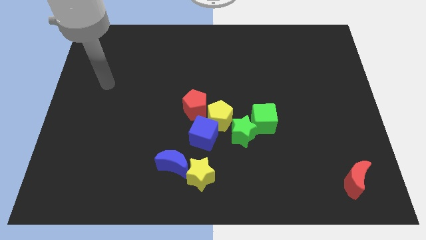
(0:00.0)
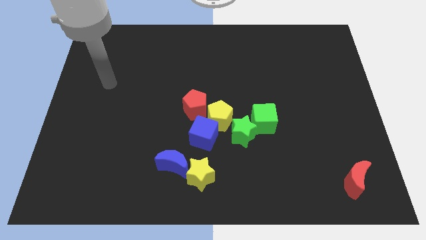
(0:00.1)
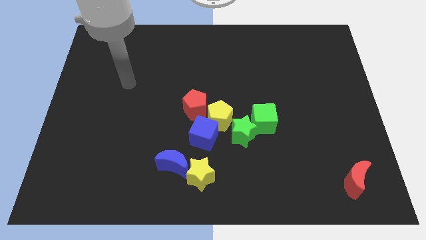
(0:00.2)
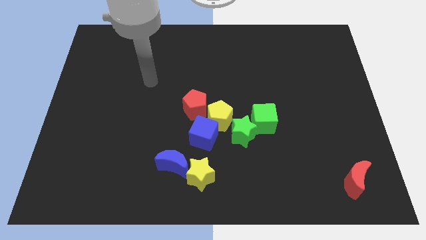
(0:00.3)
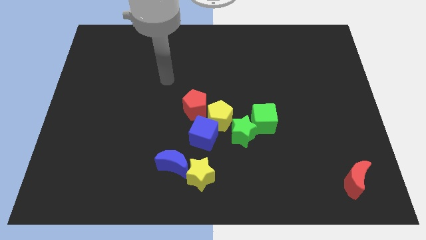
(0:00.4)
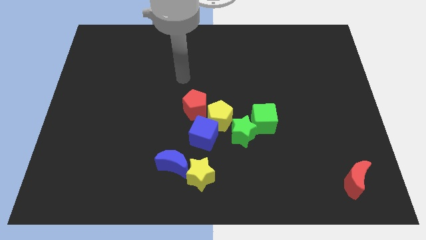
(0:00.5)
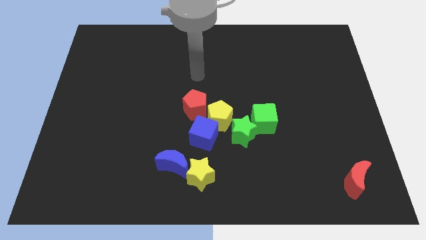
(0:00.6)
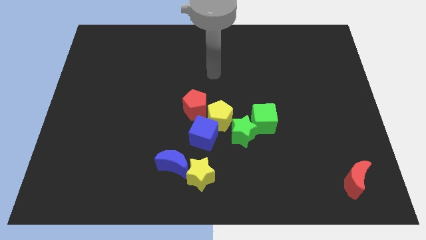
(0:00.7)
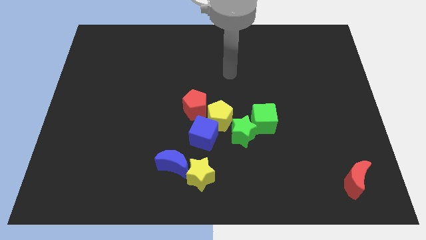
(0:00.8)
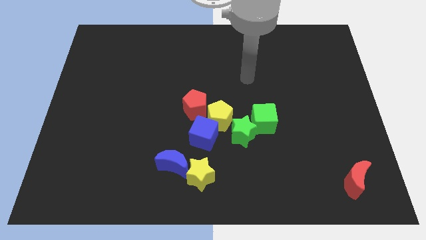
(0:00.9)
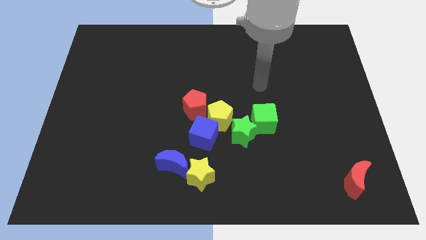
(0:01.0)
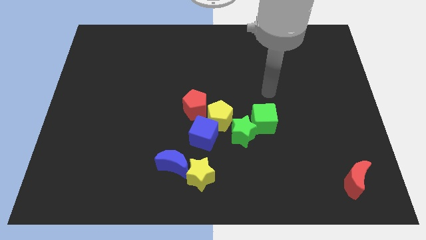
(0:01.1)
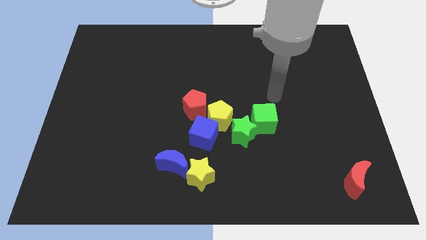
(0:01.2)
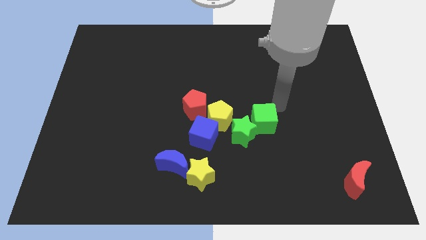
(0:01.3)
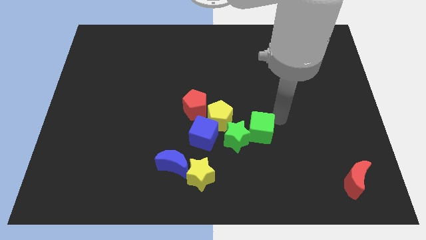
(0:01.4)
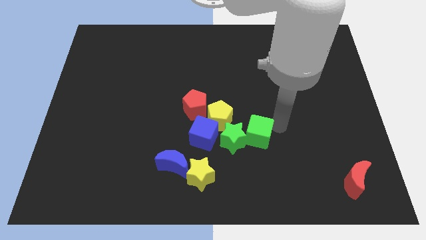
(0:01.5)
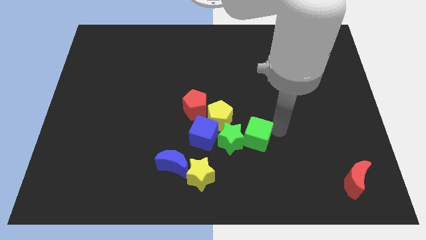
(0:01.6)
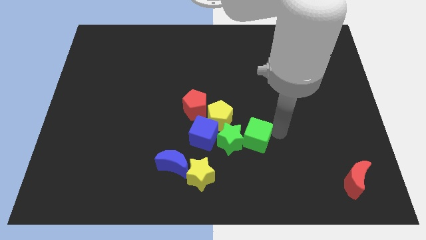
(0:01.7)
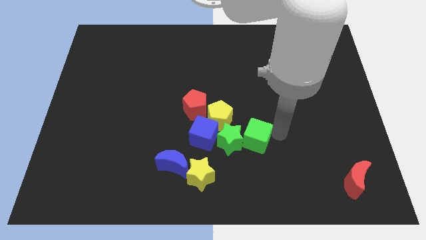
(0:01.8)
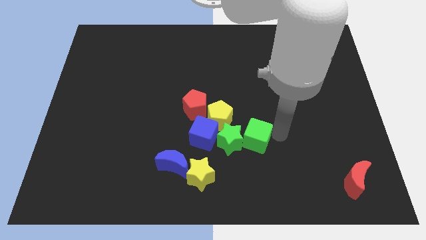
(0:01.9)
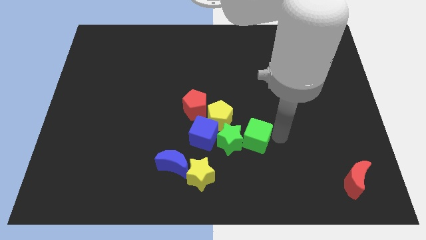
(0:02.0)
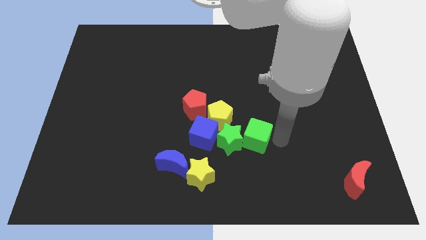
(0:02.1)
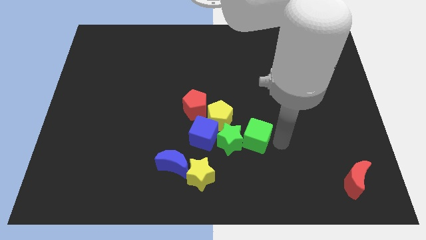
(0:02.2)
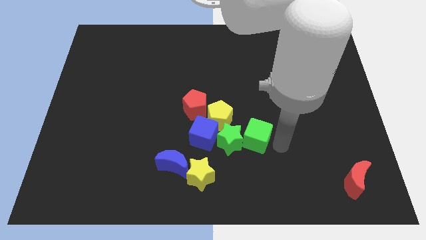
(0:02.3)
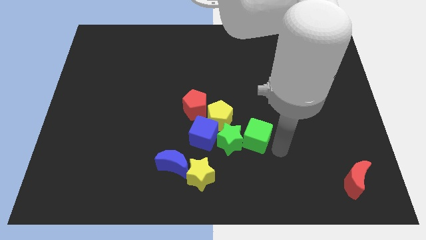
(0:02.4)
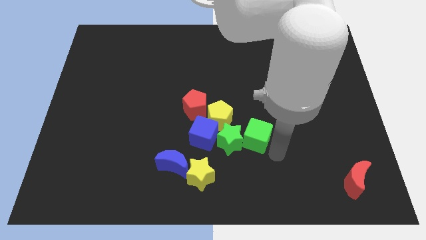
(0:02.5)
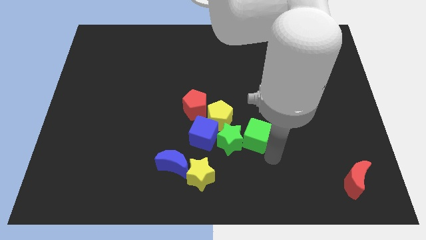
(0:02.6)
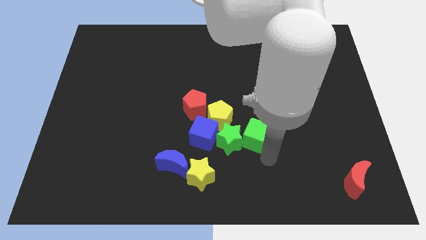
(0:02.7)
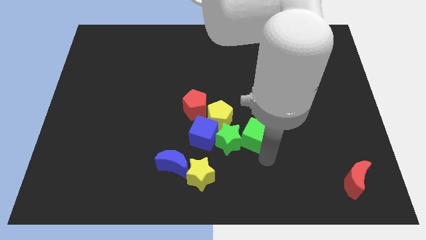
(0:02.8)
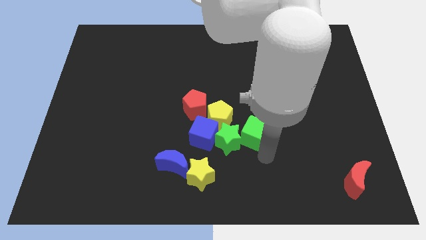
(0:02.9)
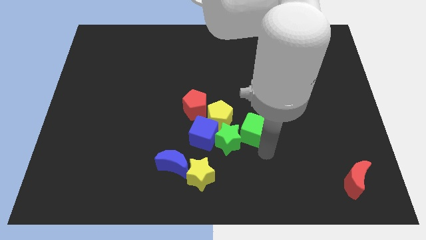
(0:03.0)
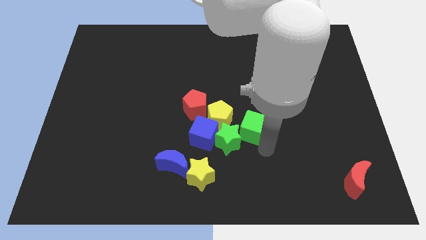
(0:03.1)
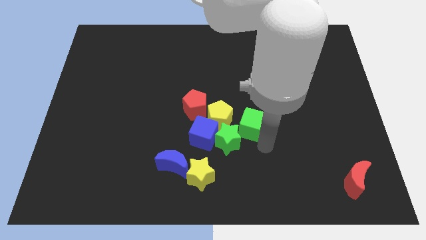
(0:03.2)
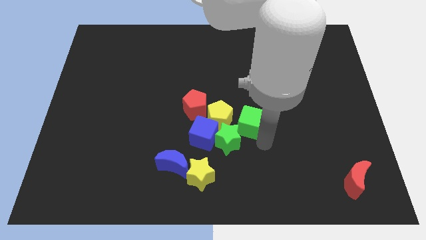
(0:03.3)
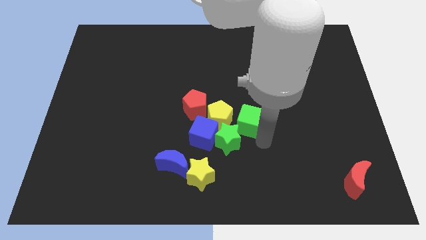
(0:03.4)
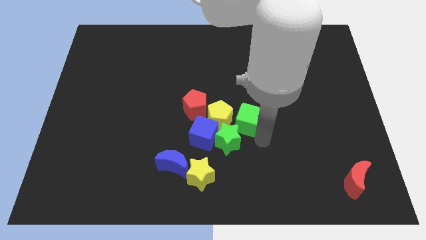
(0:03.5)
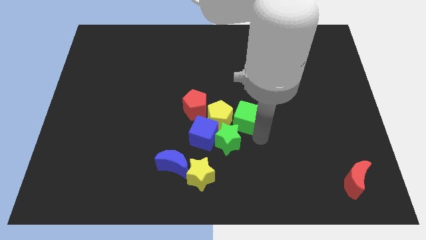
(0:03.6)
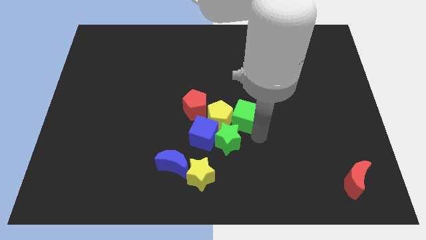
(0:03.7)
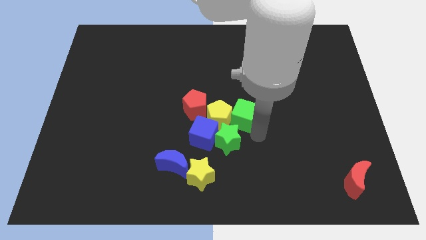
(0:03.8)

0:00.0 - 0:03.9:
move the green cube next to the yellow pentagon

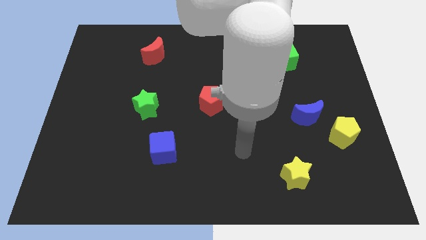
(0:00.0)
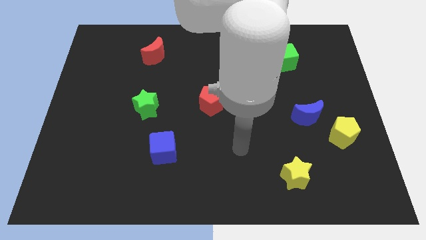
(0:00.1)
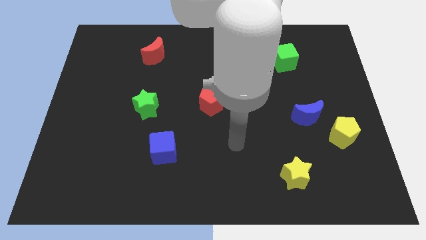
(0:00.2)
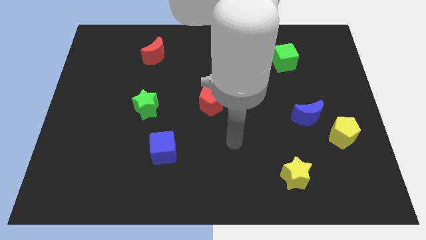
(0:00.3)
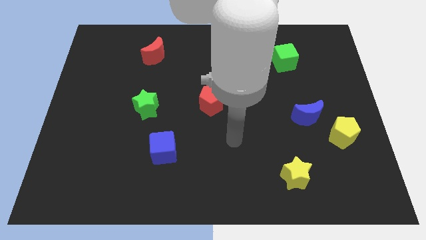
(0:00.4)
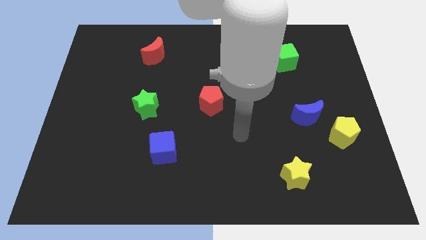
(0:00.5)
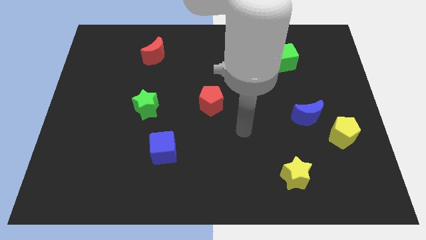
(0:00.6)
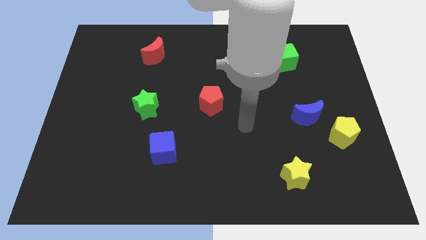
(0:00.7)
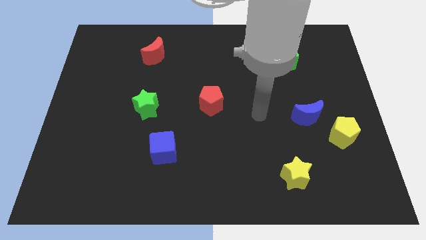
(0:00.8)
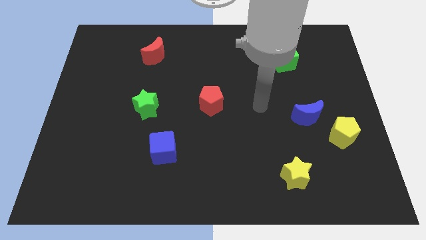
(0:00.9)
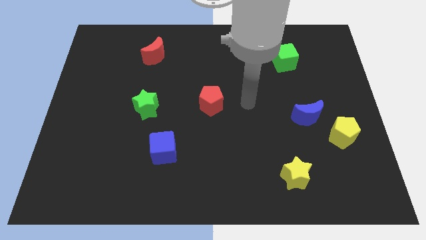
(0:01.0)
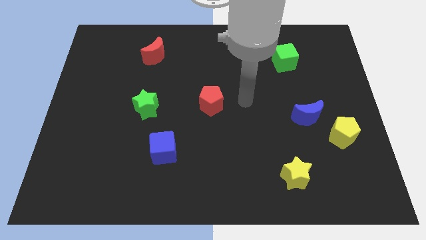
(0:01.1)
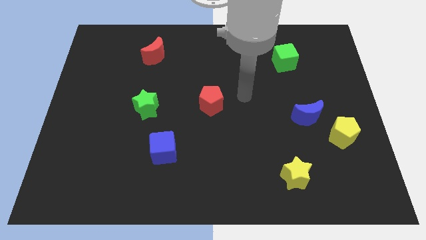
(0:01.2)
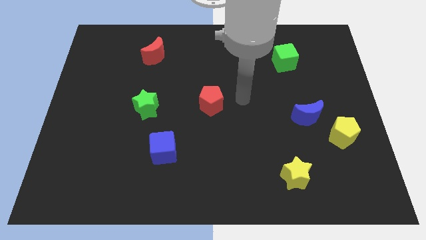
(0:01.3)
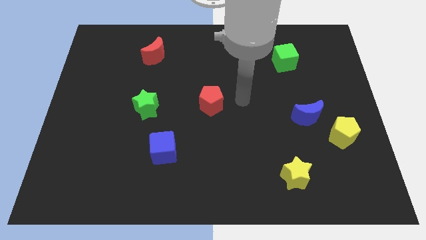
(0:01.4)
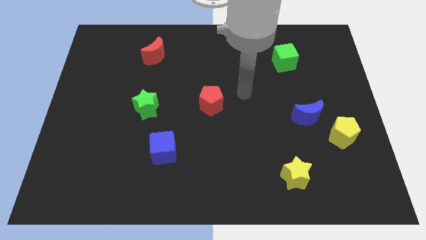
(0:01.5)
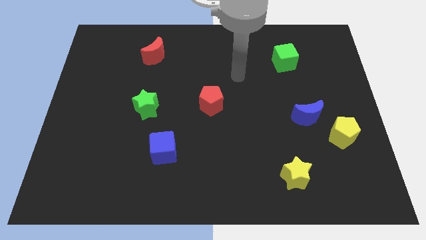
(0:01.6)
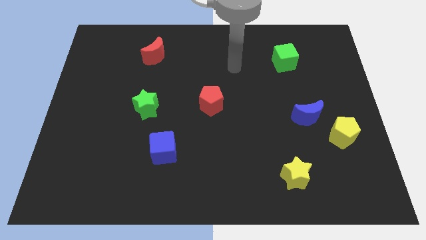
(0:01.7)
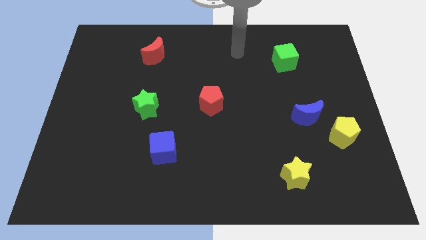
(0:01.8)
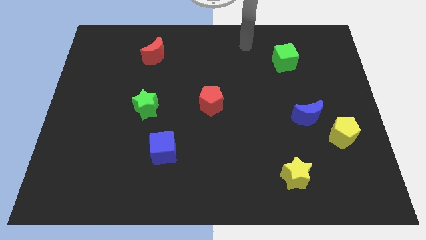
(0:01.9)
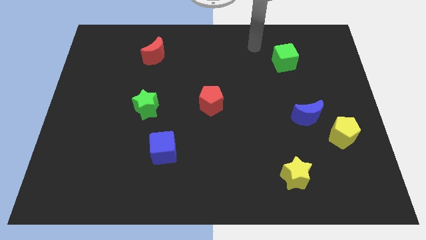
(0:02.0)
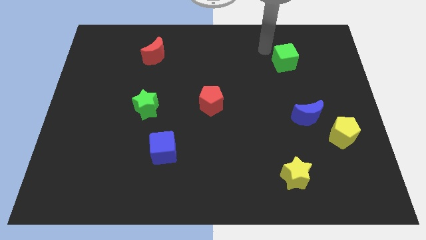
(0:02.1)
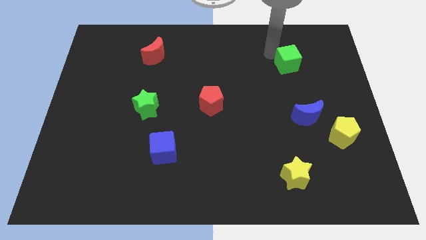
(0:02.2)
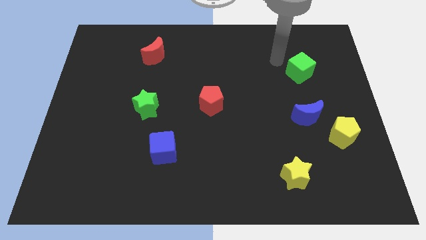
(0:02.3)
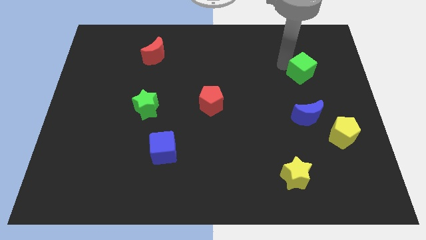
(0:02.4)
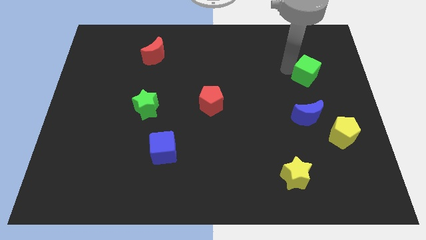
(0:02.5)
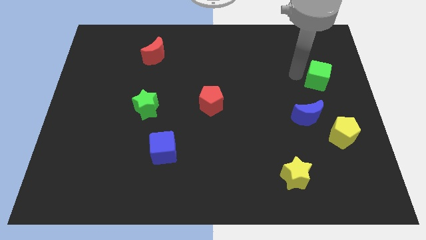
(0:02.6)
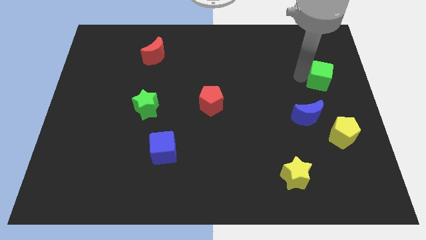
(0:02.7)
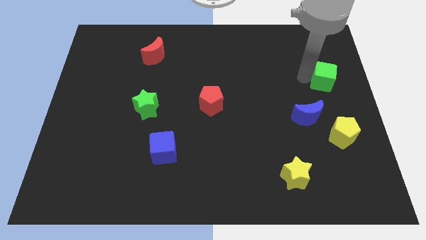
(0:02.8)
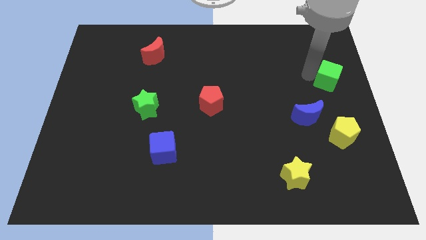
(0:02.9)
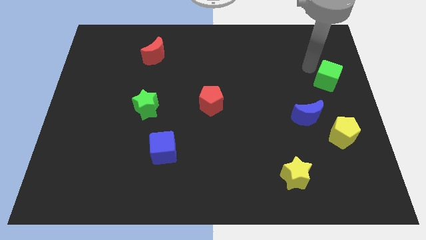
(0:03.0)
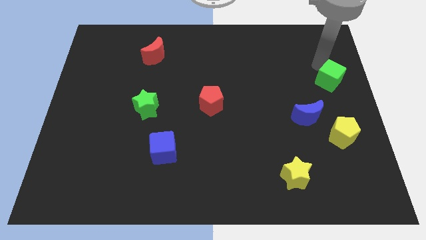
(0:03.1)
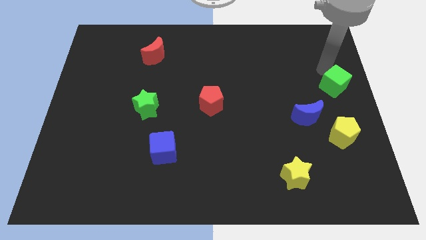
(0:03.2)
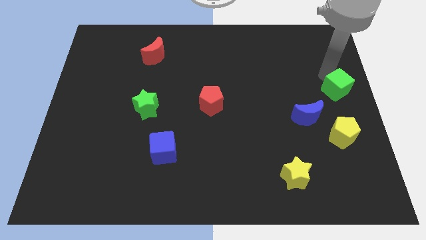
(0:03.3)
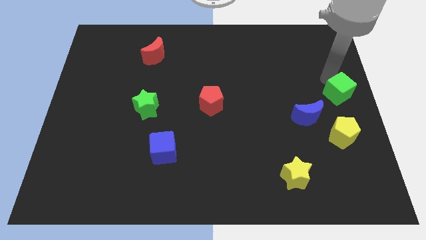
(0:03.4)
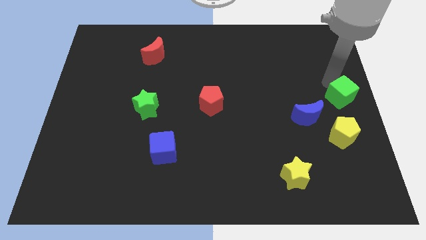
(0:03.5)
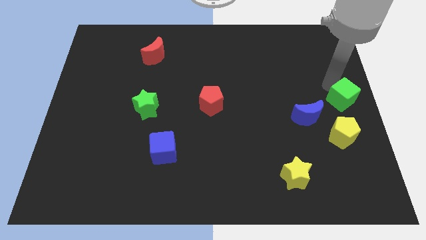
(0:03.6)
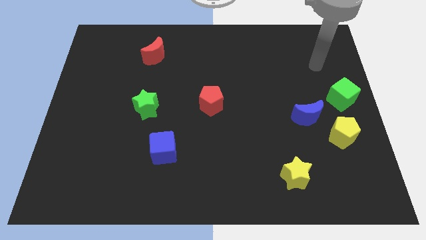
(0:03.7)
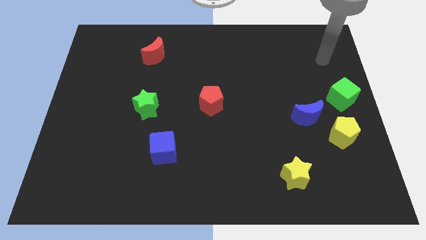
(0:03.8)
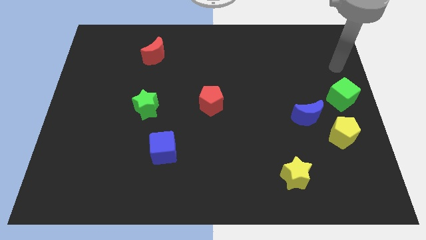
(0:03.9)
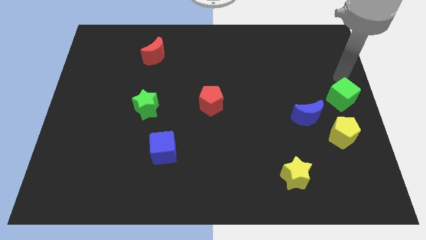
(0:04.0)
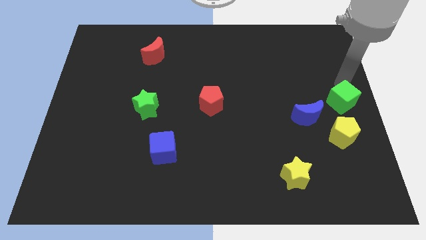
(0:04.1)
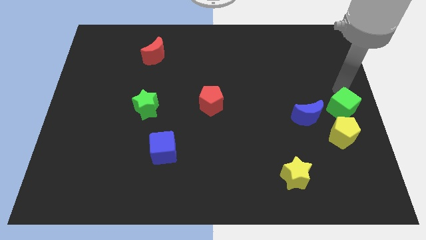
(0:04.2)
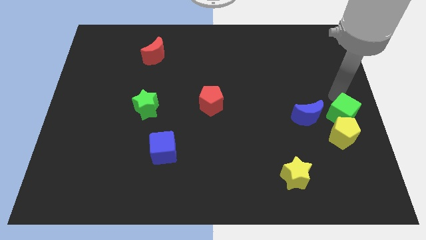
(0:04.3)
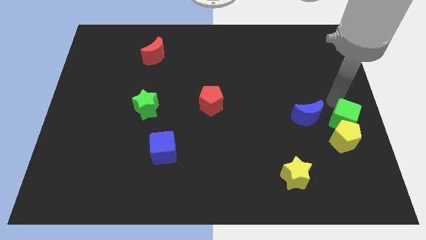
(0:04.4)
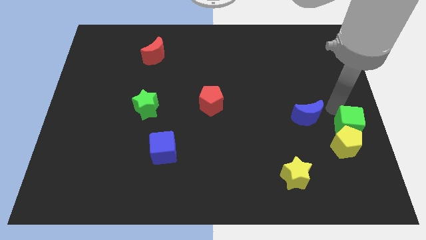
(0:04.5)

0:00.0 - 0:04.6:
push the green cube close to the yellow pentagon
